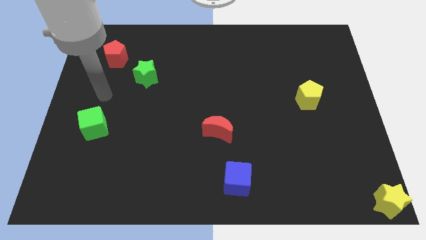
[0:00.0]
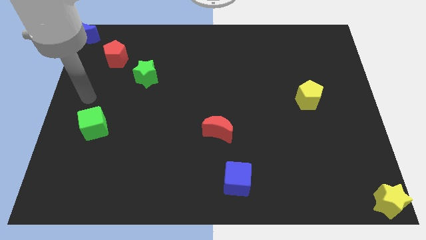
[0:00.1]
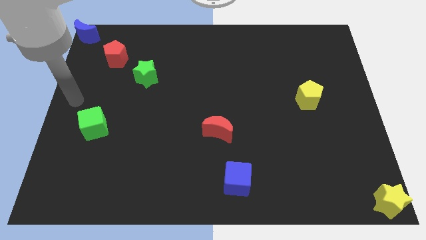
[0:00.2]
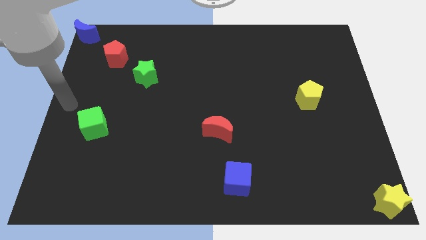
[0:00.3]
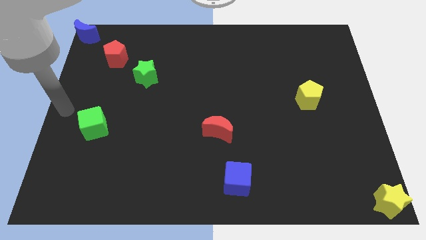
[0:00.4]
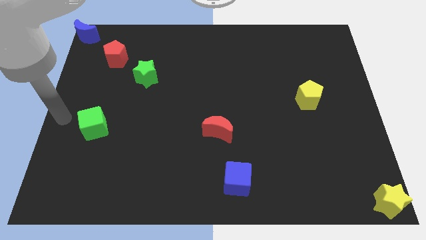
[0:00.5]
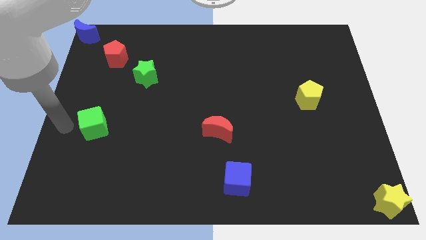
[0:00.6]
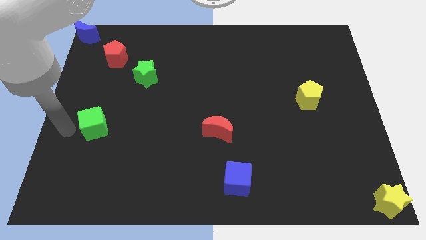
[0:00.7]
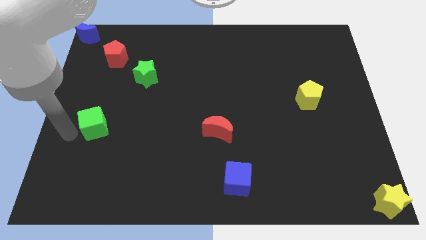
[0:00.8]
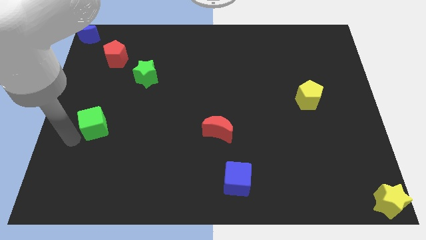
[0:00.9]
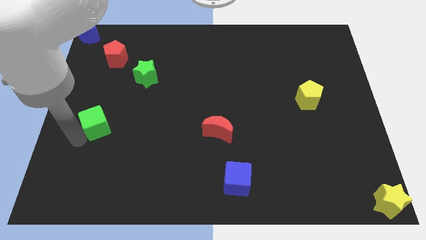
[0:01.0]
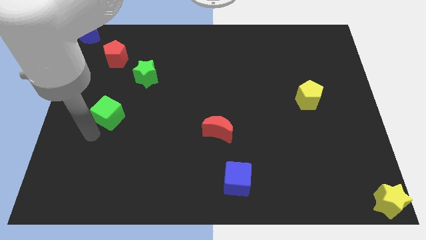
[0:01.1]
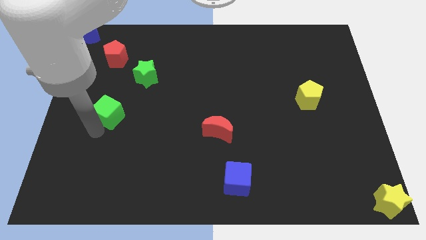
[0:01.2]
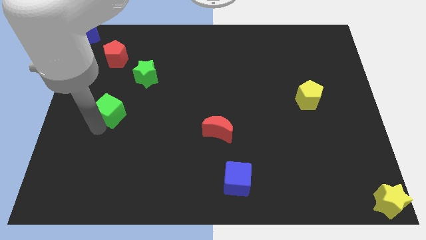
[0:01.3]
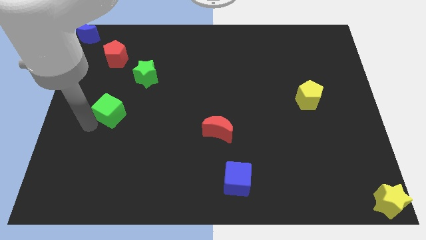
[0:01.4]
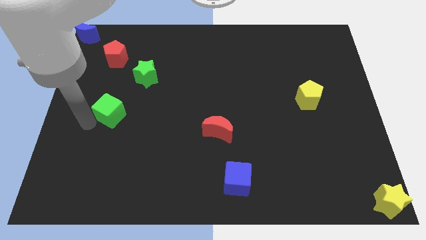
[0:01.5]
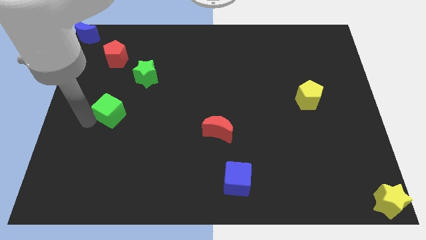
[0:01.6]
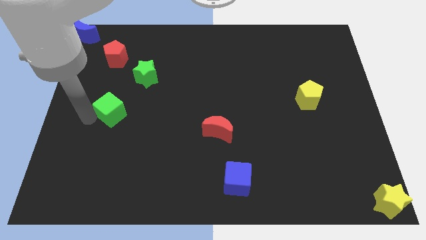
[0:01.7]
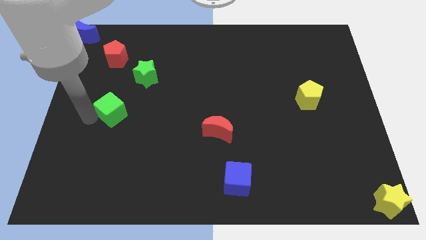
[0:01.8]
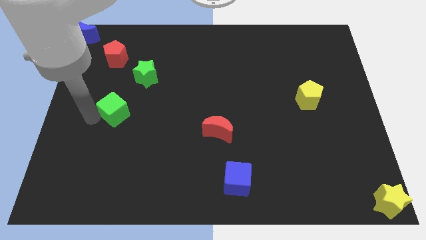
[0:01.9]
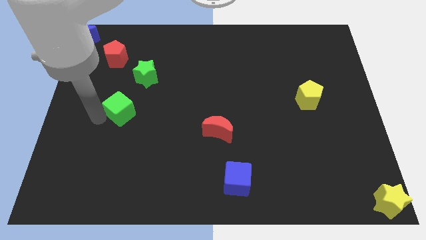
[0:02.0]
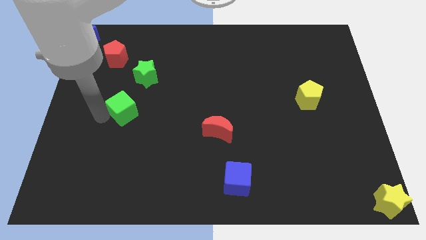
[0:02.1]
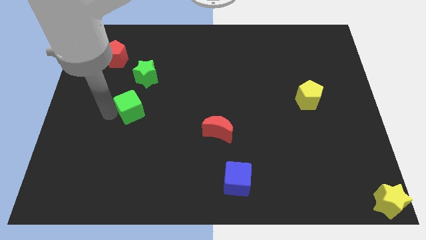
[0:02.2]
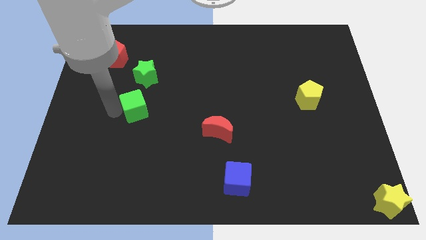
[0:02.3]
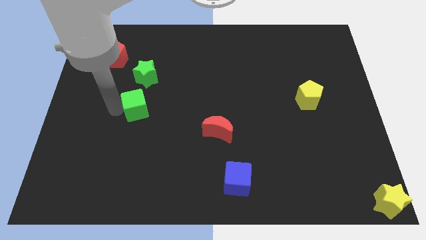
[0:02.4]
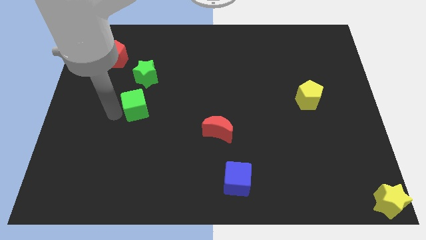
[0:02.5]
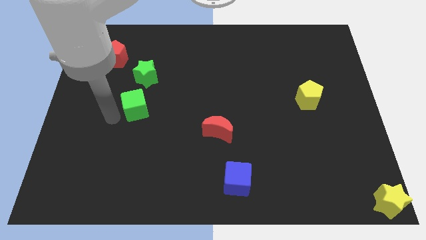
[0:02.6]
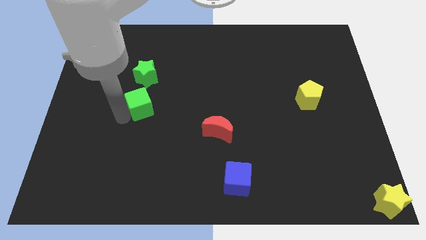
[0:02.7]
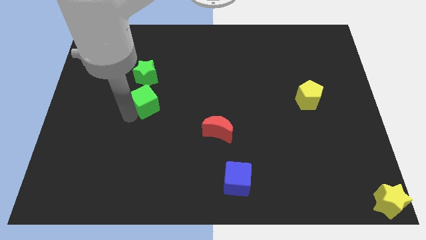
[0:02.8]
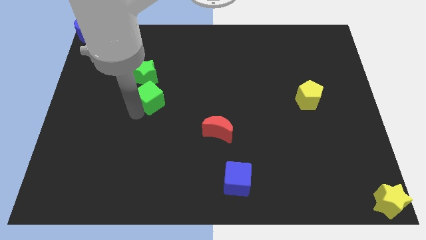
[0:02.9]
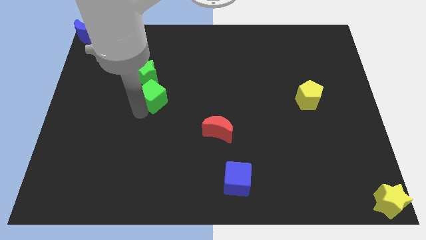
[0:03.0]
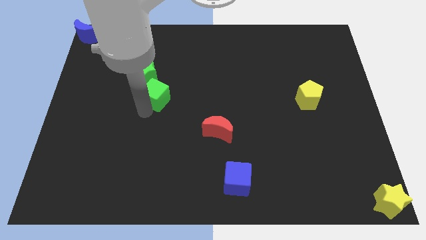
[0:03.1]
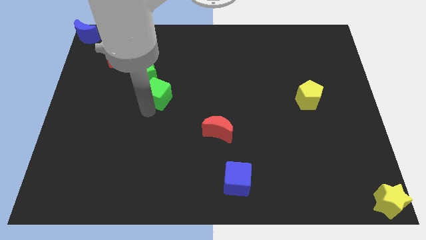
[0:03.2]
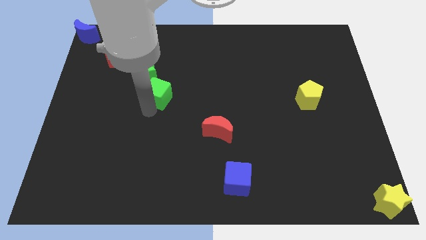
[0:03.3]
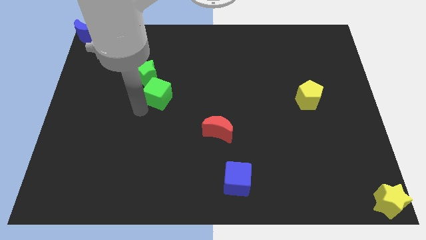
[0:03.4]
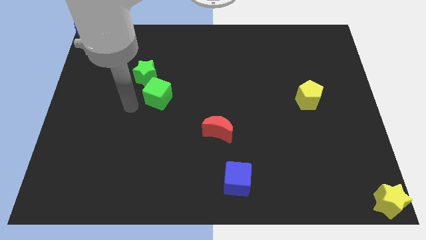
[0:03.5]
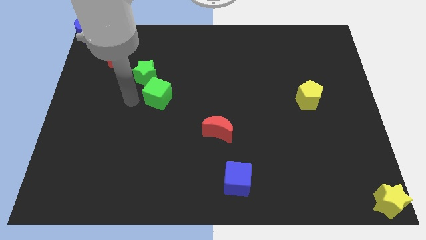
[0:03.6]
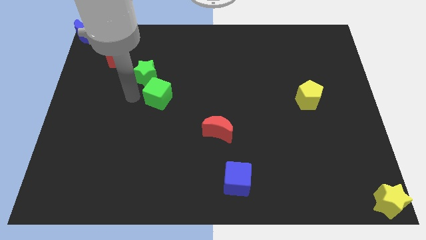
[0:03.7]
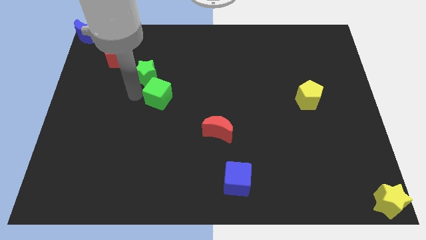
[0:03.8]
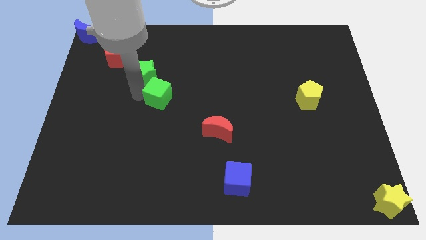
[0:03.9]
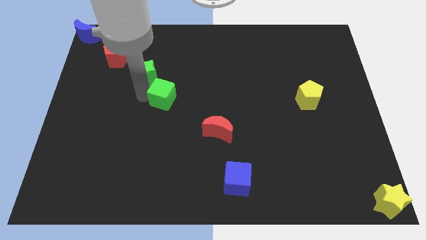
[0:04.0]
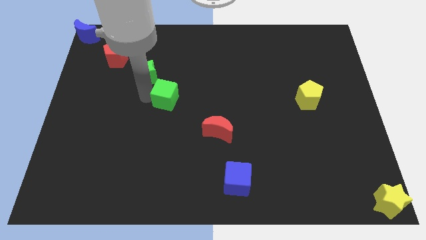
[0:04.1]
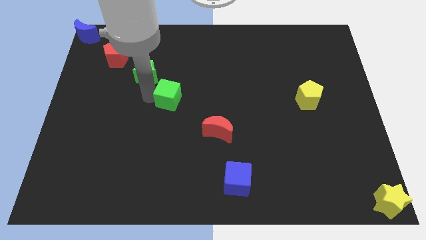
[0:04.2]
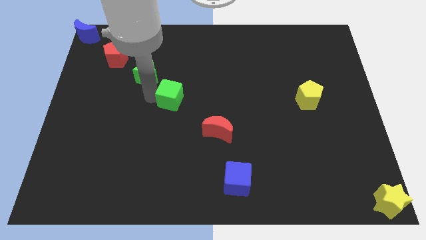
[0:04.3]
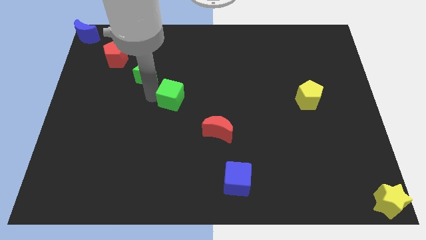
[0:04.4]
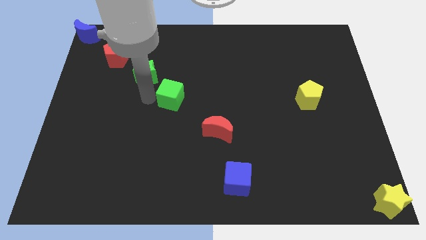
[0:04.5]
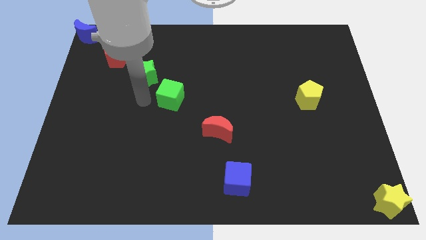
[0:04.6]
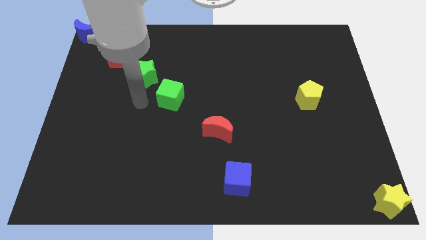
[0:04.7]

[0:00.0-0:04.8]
place the green cube beside the green star to form a line

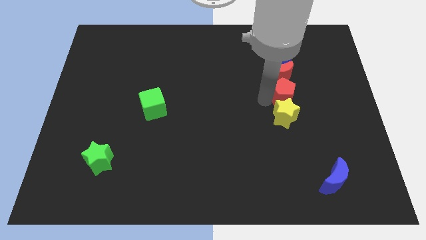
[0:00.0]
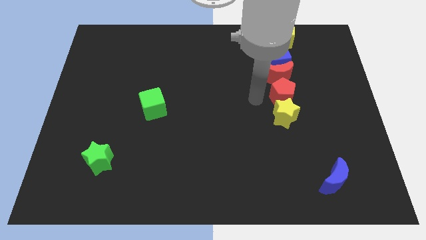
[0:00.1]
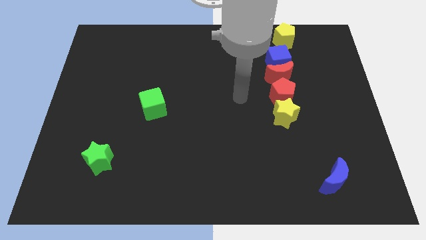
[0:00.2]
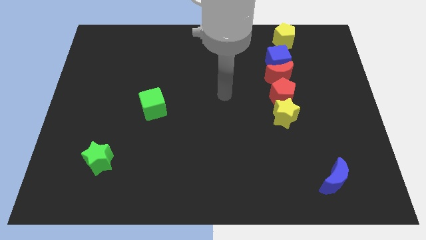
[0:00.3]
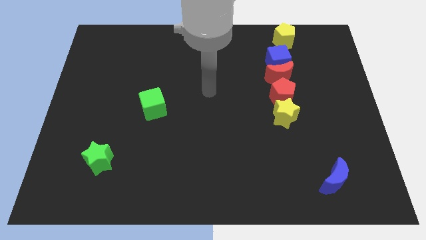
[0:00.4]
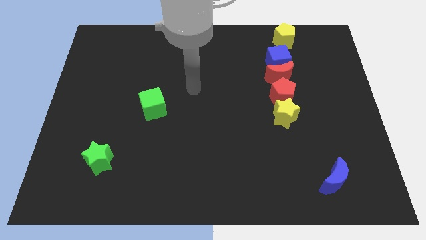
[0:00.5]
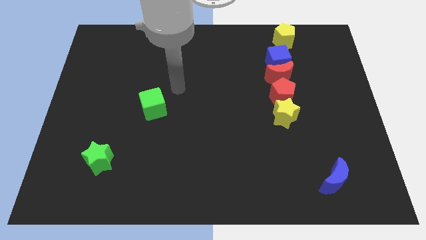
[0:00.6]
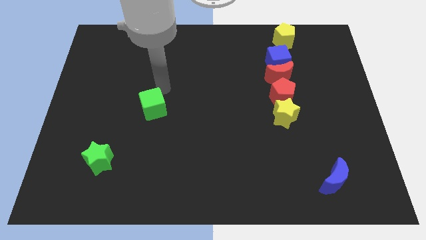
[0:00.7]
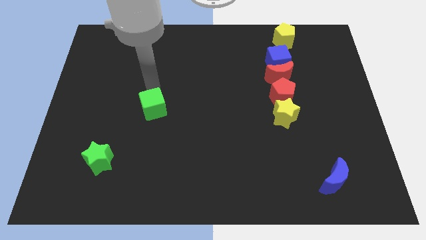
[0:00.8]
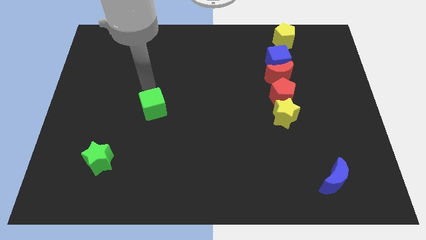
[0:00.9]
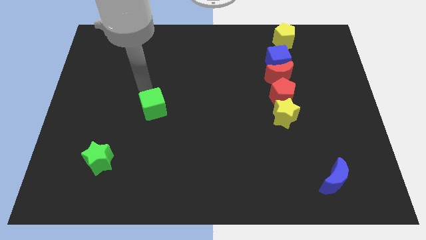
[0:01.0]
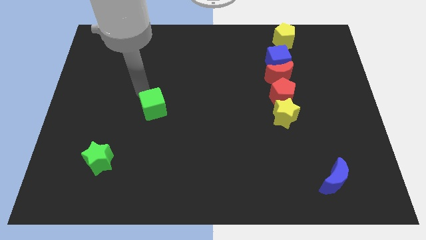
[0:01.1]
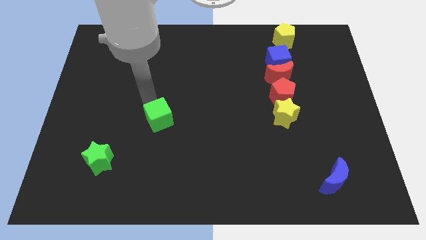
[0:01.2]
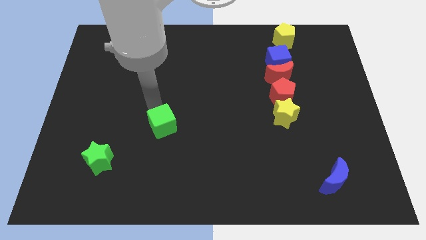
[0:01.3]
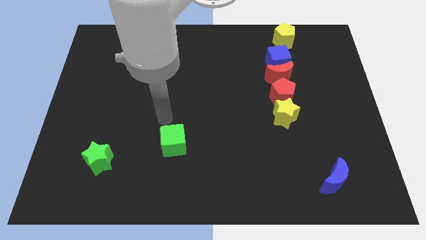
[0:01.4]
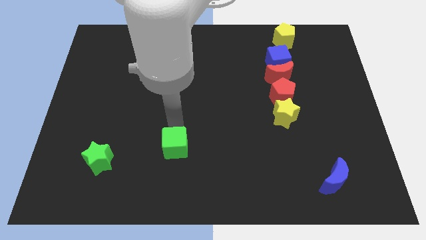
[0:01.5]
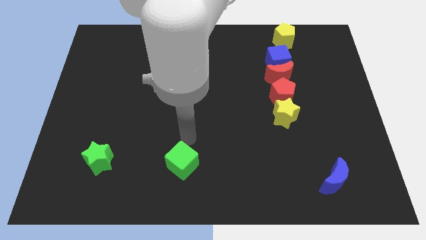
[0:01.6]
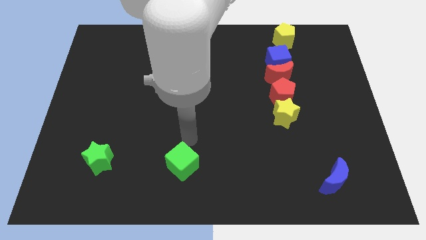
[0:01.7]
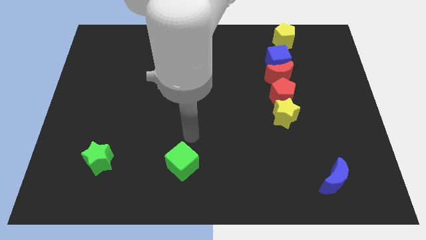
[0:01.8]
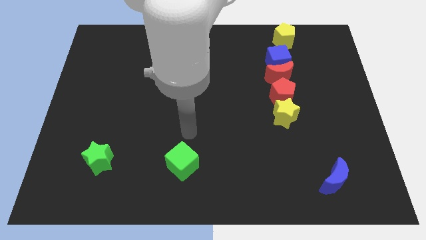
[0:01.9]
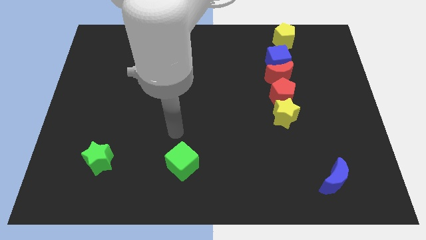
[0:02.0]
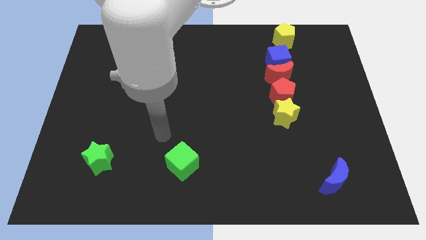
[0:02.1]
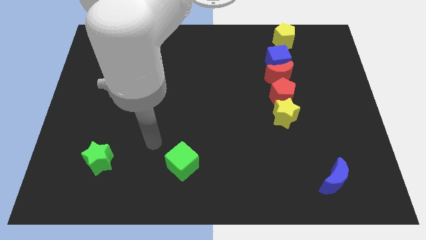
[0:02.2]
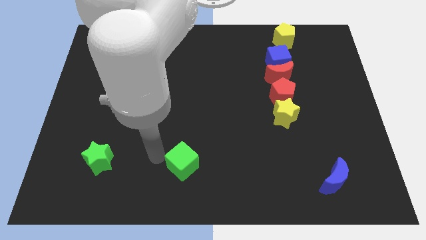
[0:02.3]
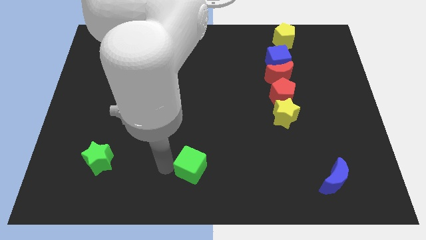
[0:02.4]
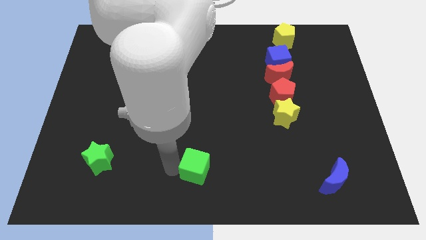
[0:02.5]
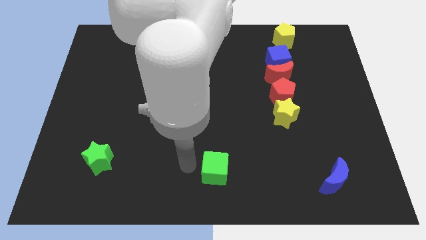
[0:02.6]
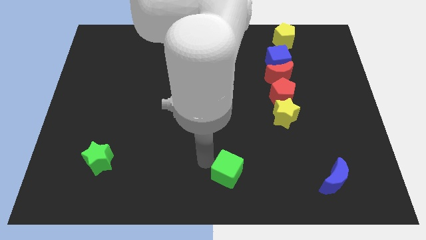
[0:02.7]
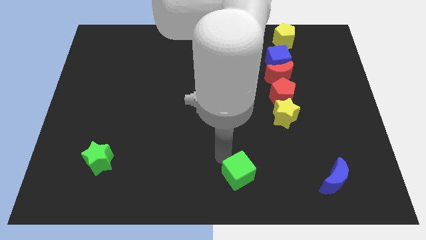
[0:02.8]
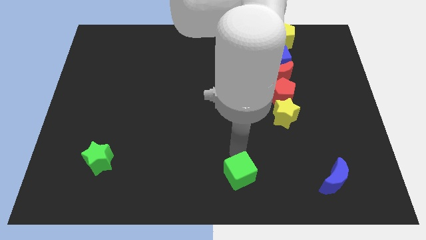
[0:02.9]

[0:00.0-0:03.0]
push the green cube downward

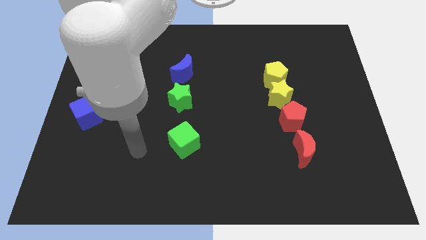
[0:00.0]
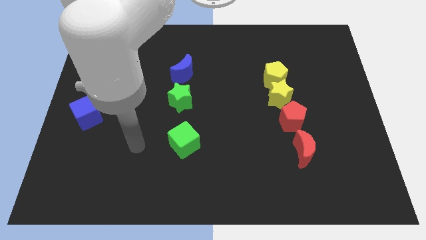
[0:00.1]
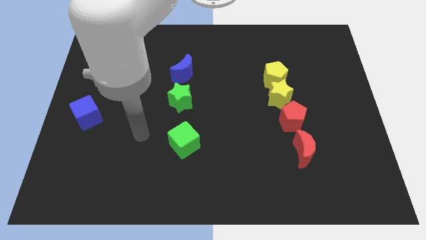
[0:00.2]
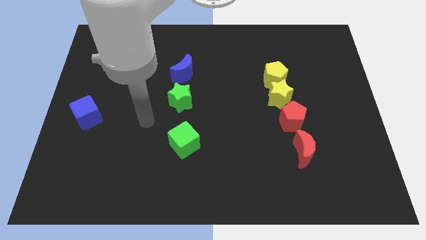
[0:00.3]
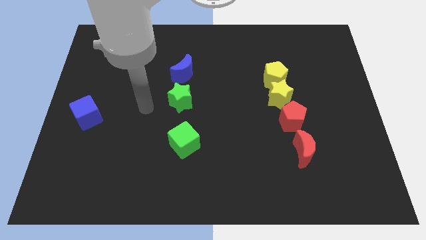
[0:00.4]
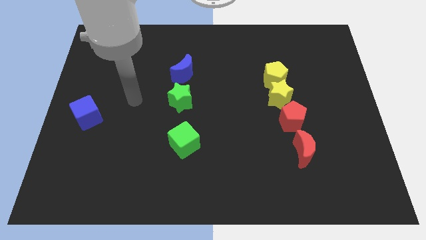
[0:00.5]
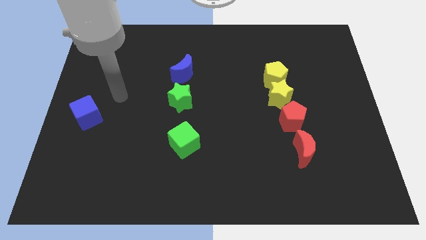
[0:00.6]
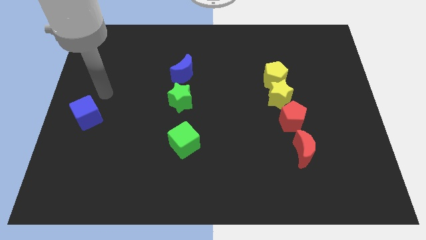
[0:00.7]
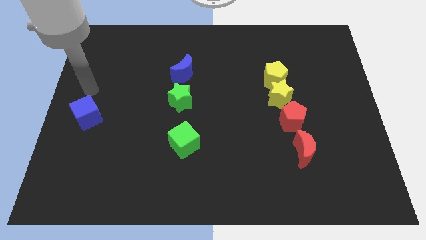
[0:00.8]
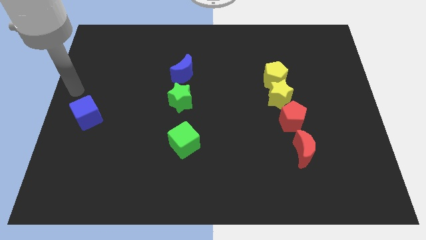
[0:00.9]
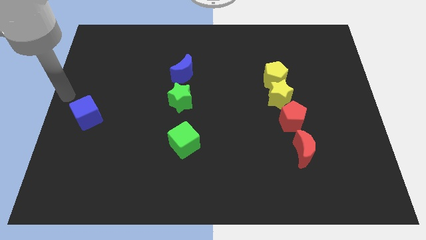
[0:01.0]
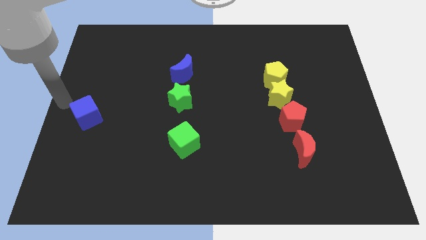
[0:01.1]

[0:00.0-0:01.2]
place your arm to the left of the blue cube
